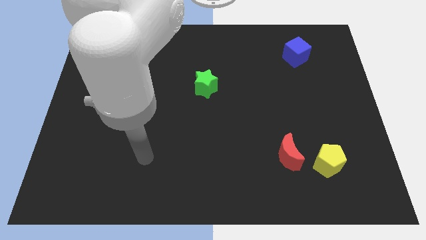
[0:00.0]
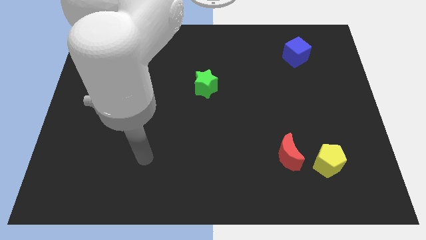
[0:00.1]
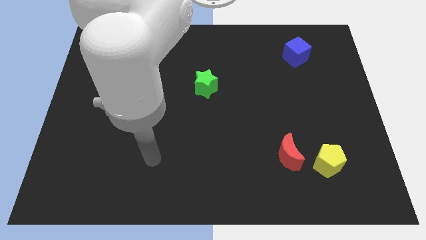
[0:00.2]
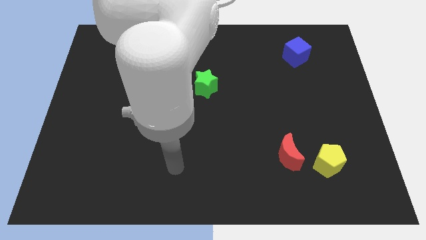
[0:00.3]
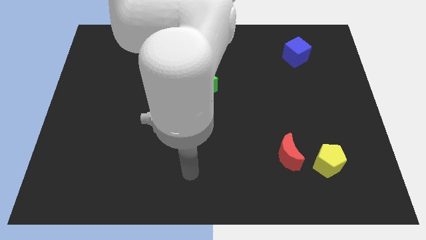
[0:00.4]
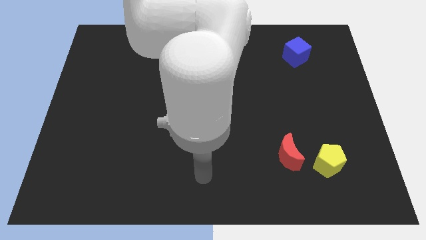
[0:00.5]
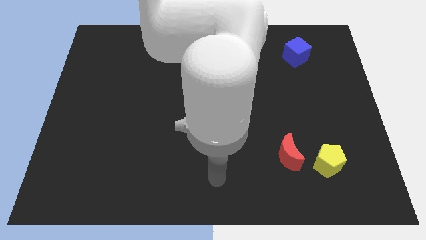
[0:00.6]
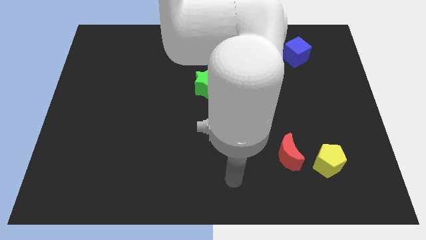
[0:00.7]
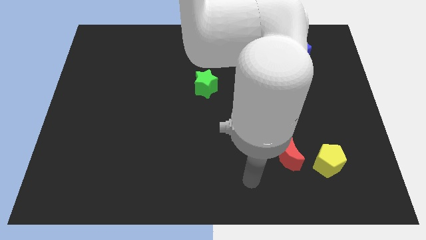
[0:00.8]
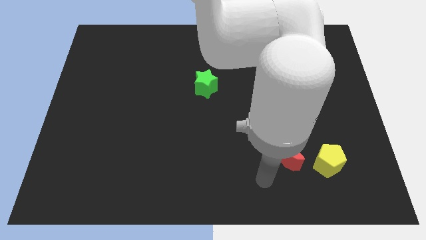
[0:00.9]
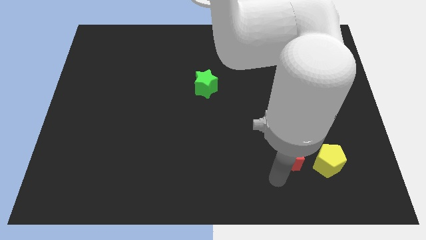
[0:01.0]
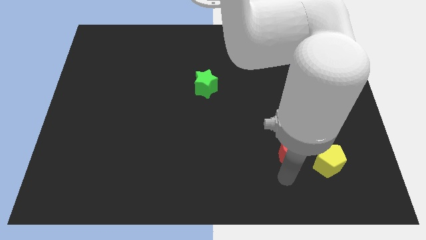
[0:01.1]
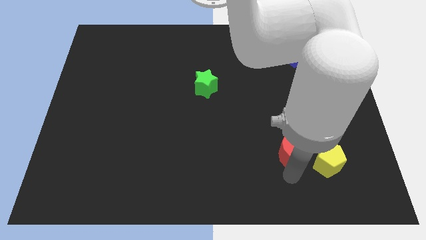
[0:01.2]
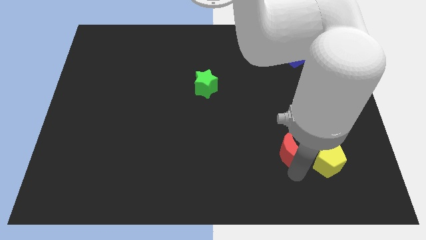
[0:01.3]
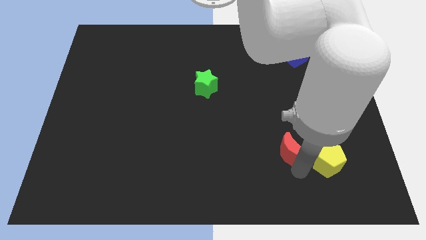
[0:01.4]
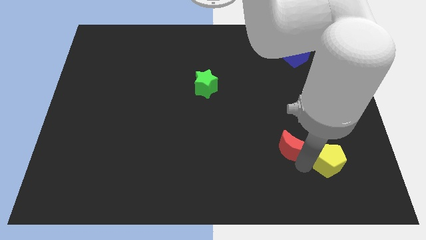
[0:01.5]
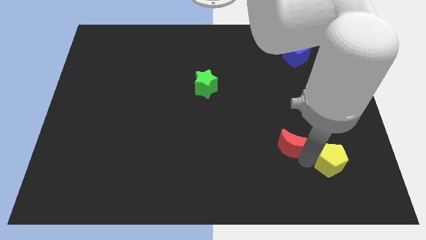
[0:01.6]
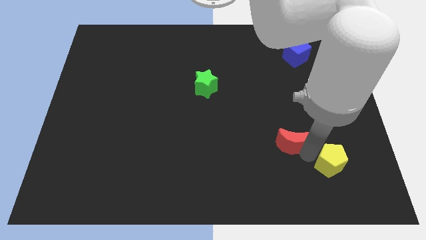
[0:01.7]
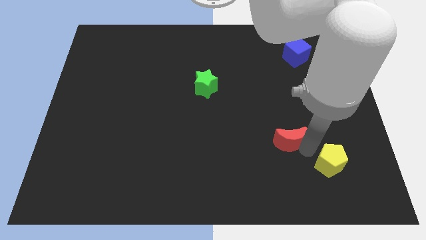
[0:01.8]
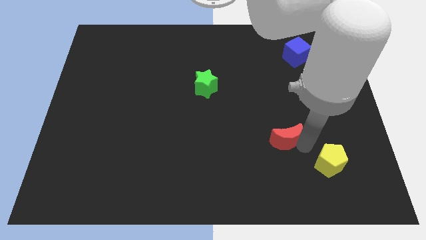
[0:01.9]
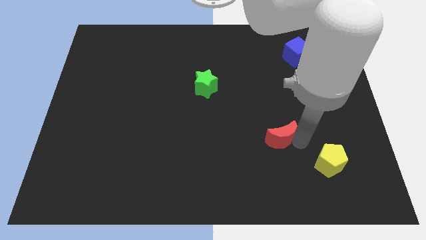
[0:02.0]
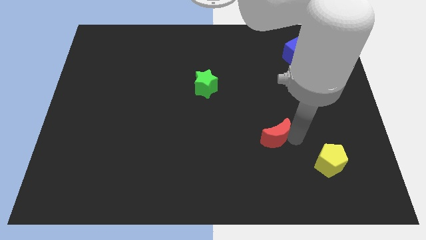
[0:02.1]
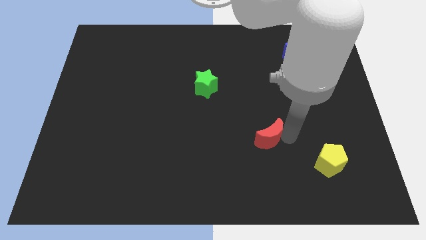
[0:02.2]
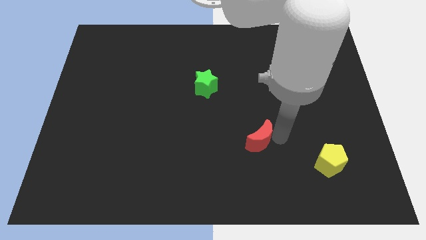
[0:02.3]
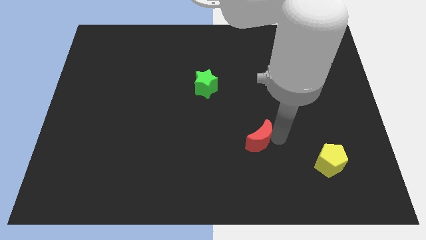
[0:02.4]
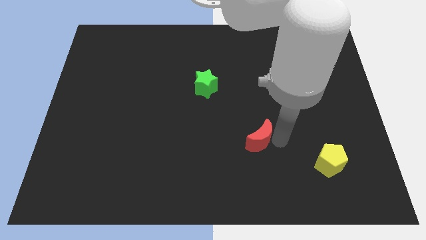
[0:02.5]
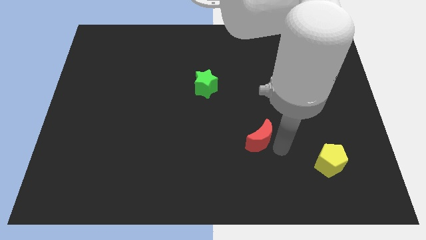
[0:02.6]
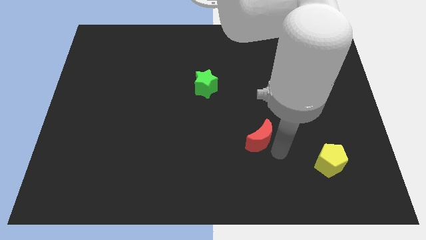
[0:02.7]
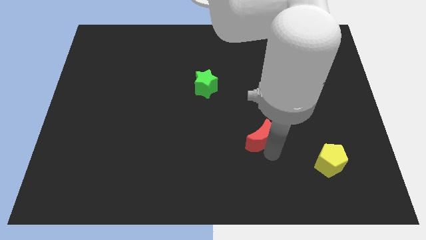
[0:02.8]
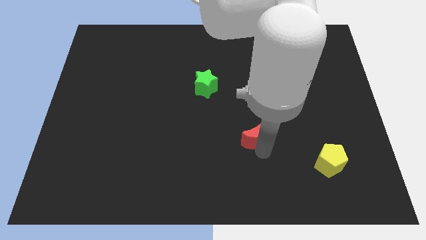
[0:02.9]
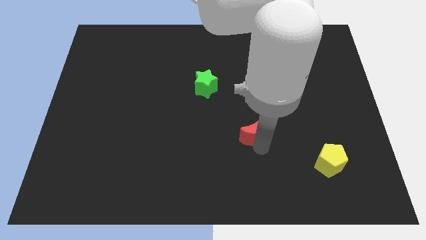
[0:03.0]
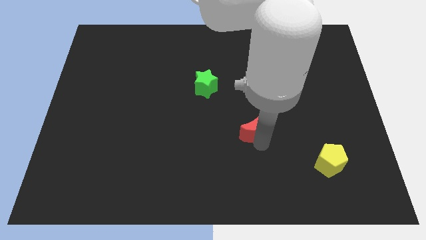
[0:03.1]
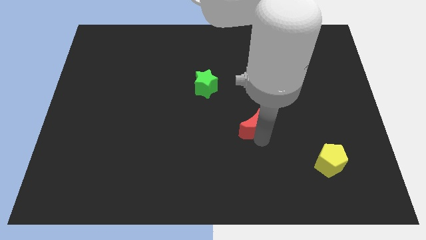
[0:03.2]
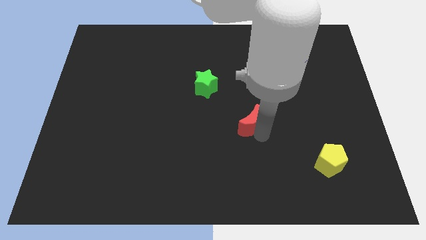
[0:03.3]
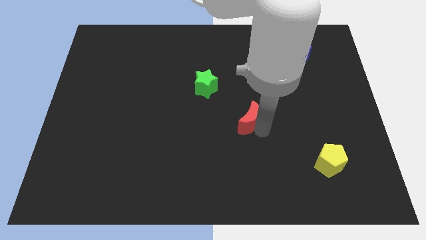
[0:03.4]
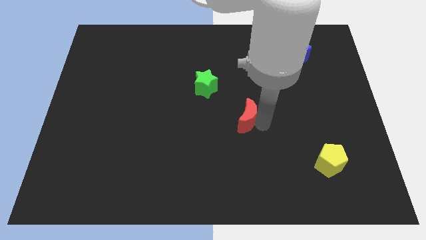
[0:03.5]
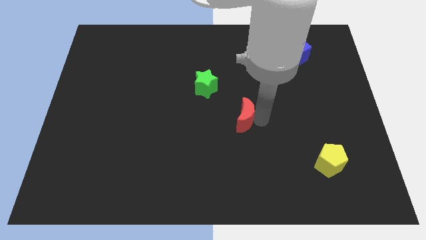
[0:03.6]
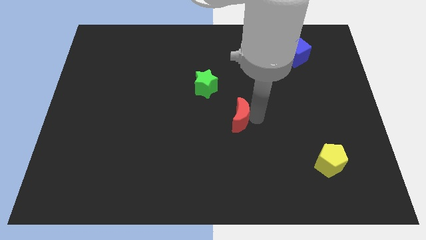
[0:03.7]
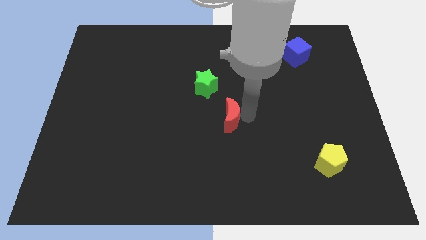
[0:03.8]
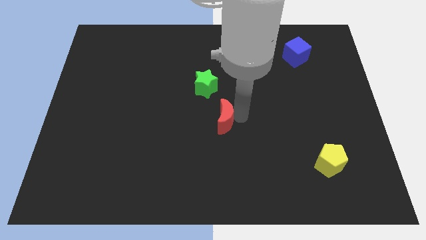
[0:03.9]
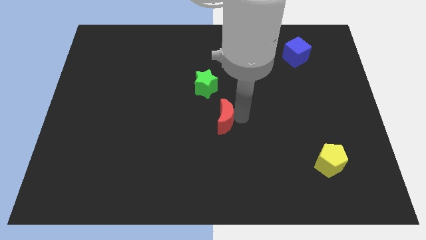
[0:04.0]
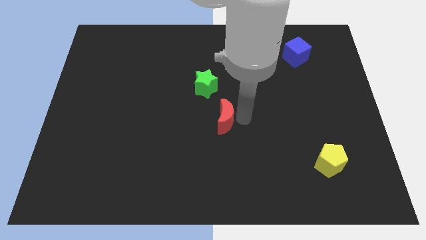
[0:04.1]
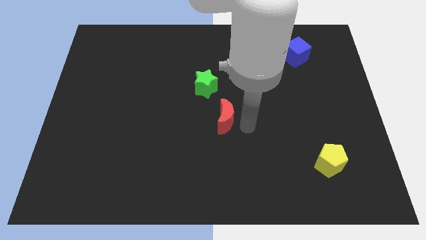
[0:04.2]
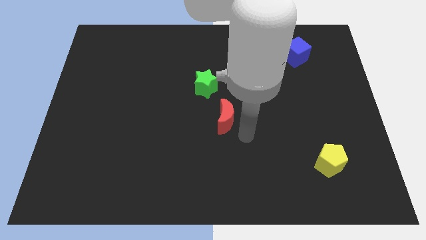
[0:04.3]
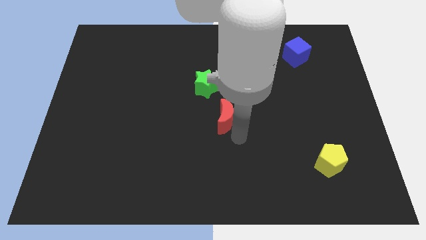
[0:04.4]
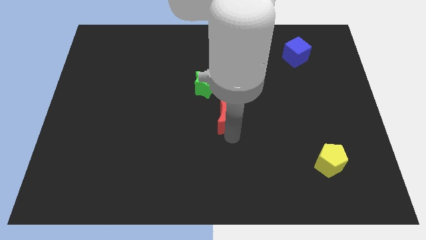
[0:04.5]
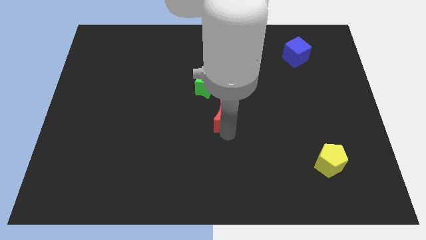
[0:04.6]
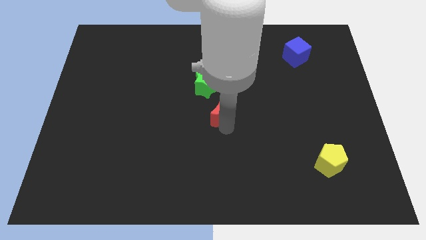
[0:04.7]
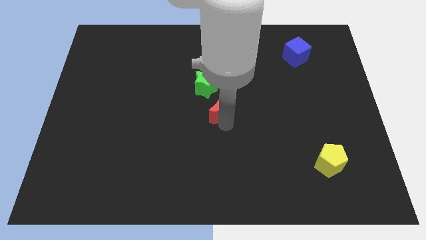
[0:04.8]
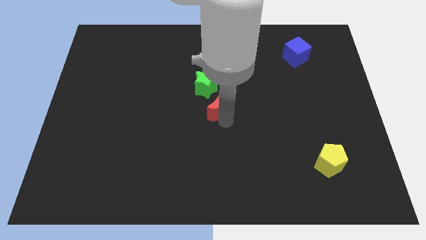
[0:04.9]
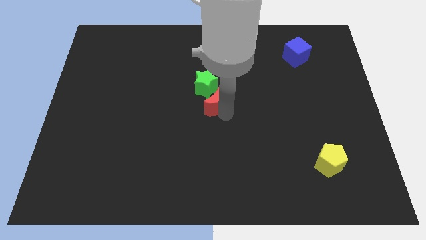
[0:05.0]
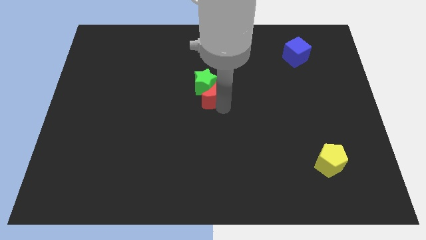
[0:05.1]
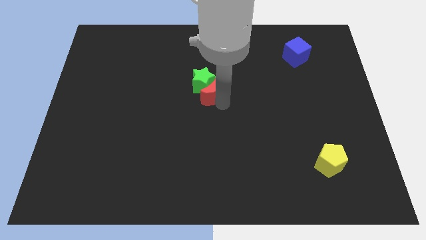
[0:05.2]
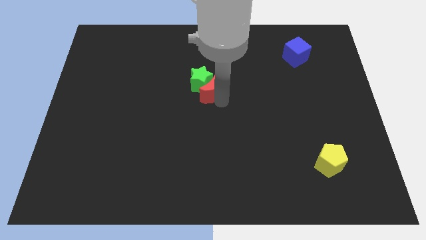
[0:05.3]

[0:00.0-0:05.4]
slide the red moon close to the green block

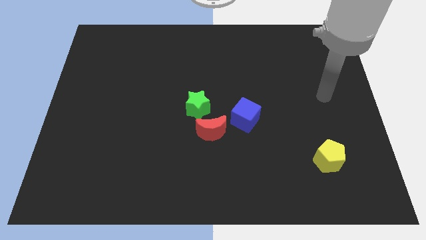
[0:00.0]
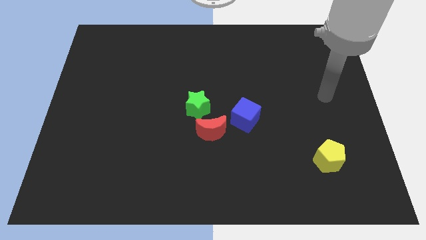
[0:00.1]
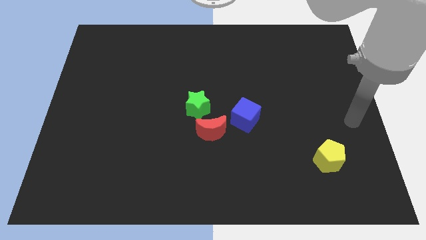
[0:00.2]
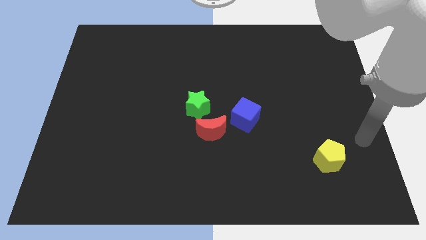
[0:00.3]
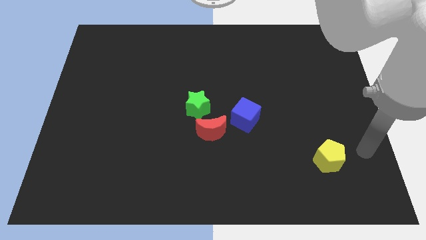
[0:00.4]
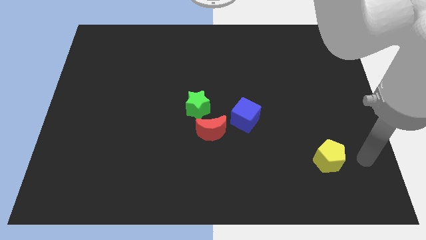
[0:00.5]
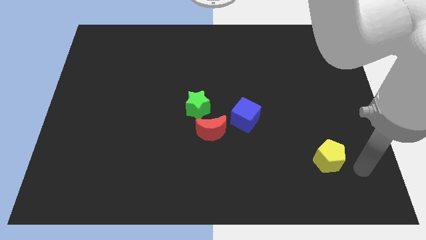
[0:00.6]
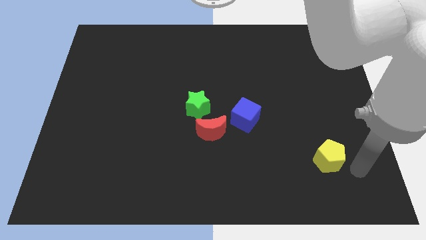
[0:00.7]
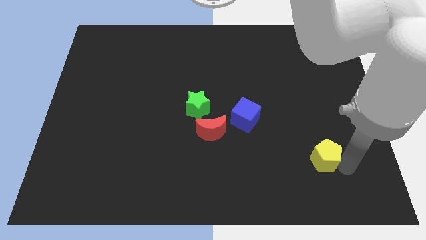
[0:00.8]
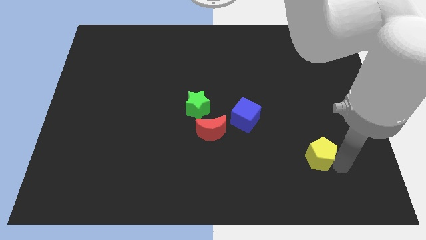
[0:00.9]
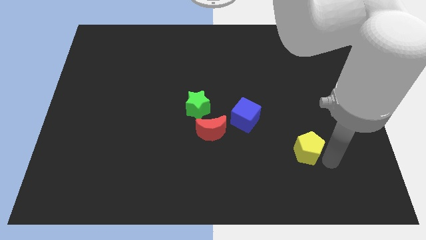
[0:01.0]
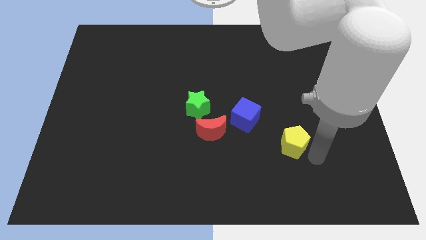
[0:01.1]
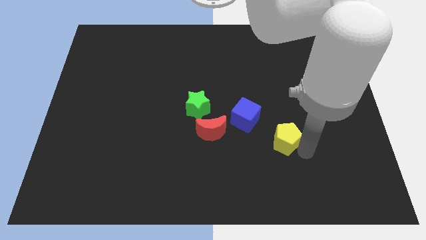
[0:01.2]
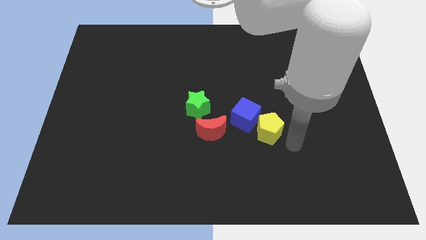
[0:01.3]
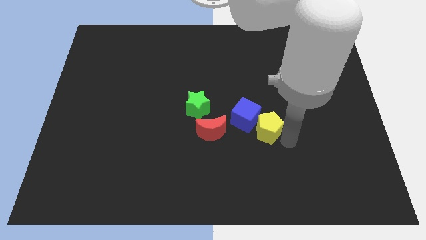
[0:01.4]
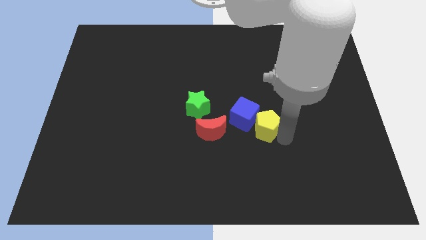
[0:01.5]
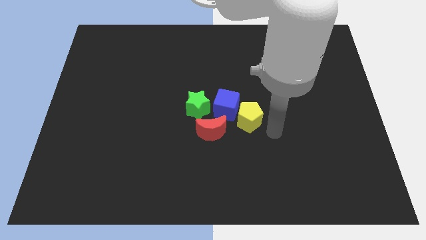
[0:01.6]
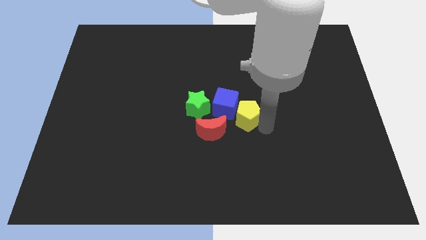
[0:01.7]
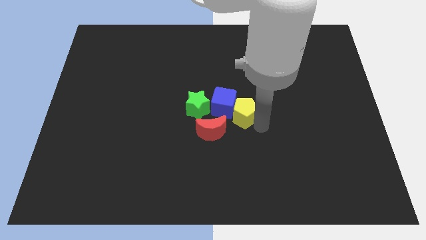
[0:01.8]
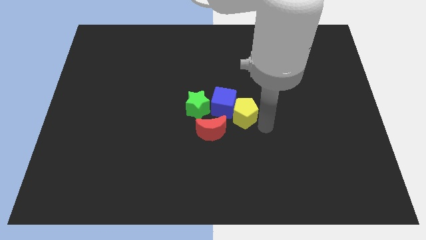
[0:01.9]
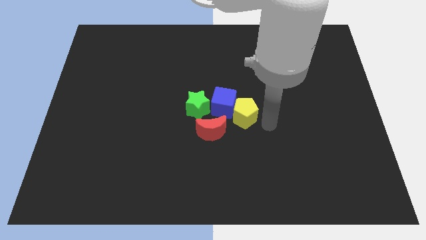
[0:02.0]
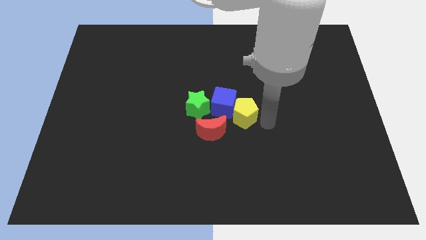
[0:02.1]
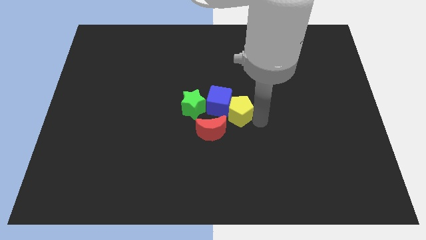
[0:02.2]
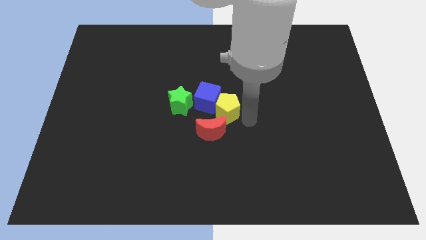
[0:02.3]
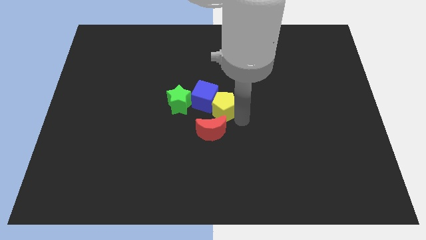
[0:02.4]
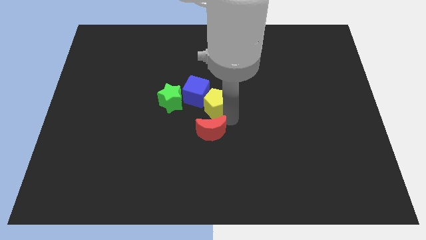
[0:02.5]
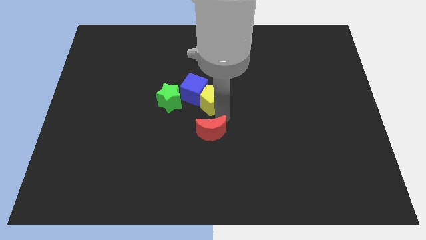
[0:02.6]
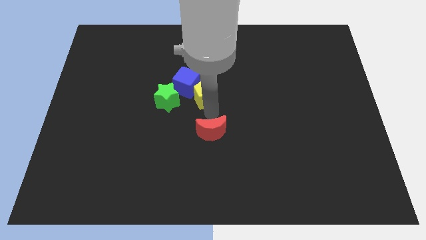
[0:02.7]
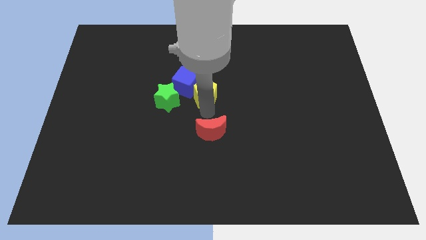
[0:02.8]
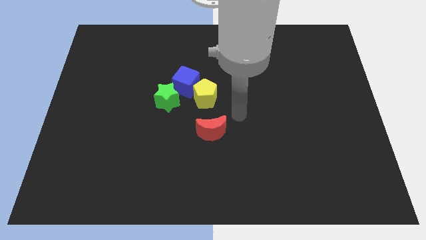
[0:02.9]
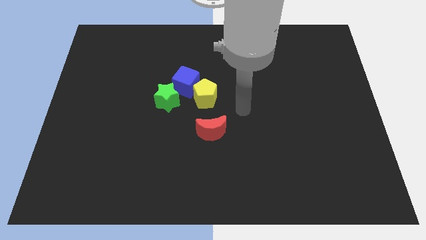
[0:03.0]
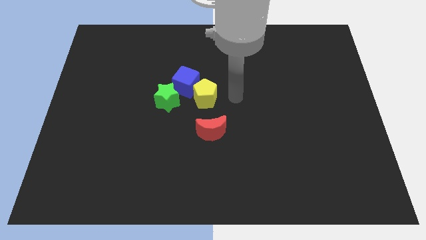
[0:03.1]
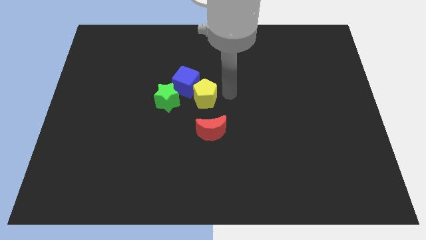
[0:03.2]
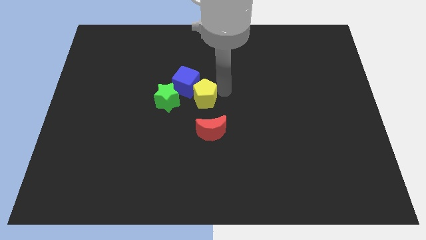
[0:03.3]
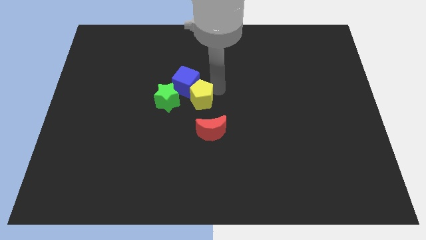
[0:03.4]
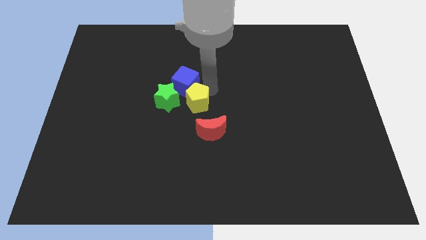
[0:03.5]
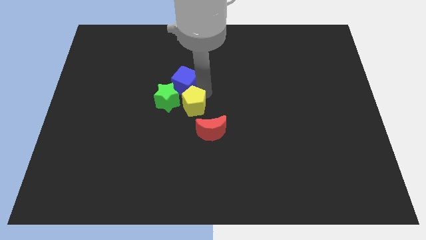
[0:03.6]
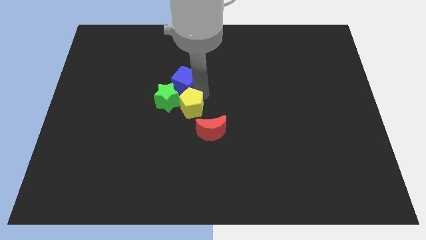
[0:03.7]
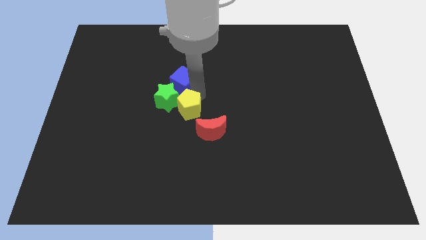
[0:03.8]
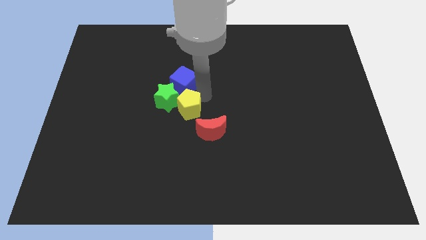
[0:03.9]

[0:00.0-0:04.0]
move the yellow pentagon to the green block
